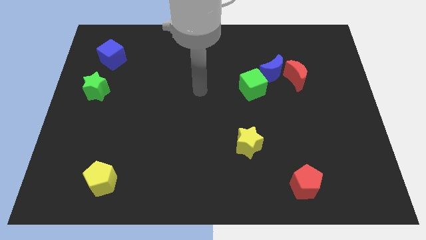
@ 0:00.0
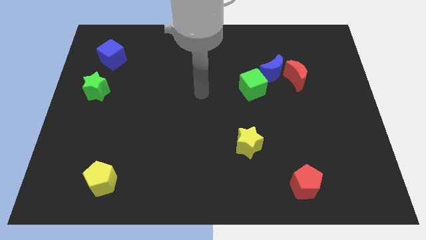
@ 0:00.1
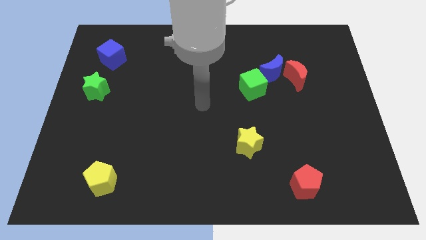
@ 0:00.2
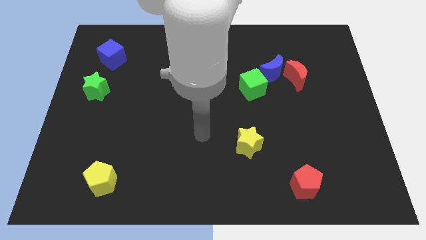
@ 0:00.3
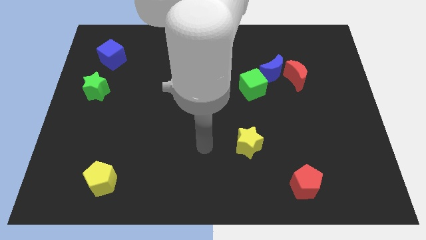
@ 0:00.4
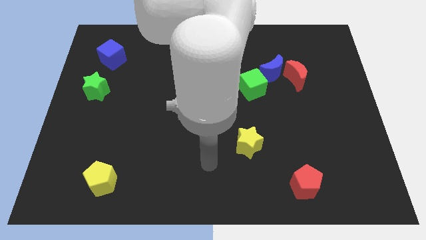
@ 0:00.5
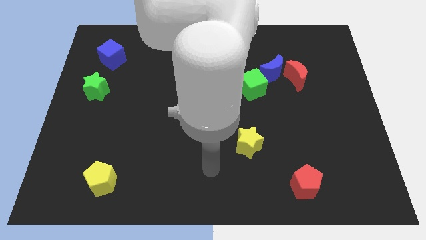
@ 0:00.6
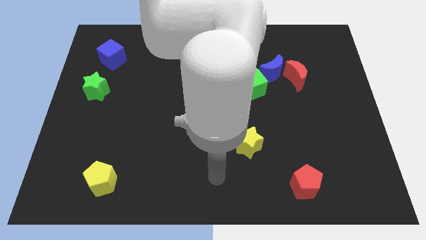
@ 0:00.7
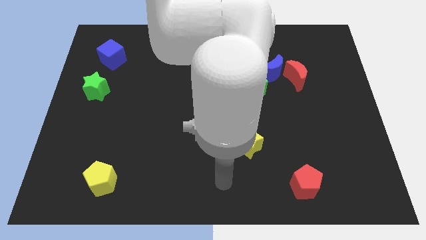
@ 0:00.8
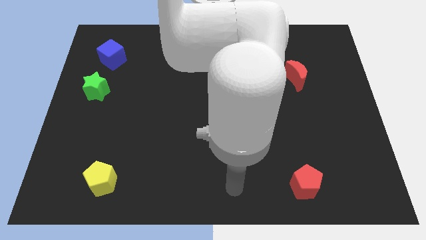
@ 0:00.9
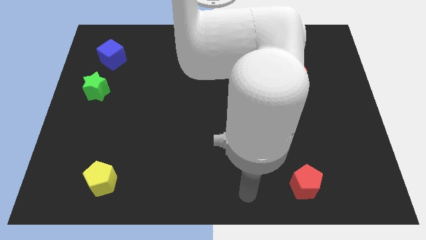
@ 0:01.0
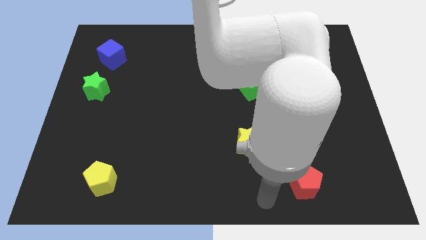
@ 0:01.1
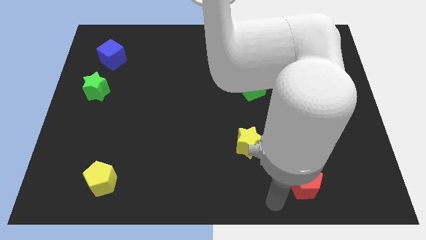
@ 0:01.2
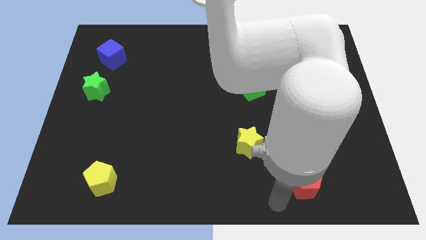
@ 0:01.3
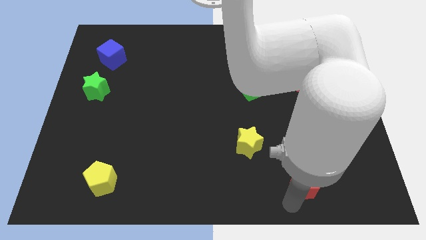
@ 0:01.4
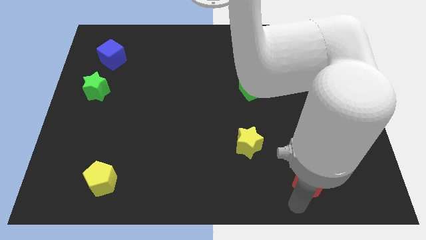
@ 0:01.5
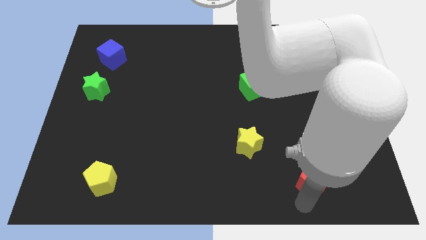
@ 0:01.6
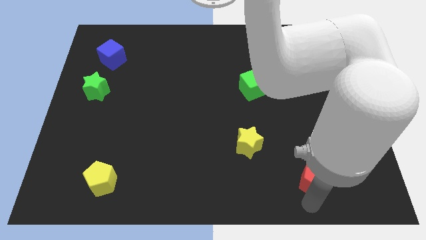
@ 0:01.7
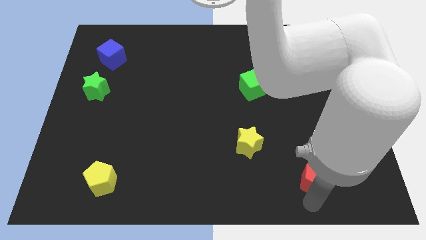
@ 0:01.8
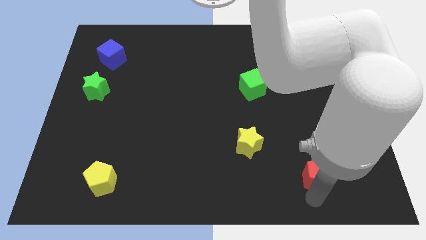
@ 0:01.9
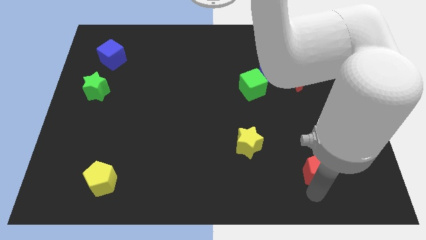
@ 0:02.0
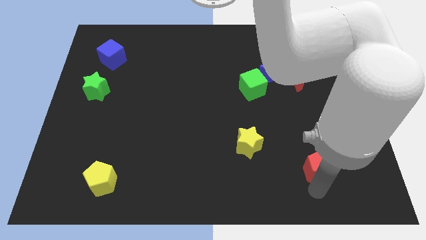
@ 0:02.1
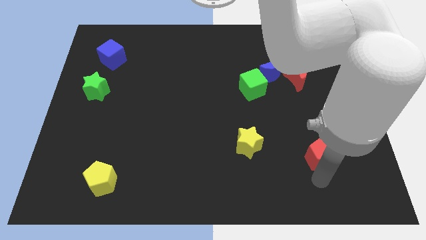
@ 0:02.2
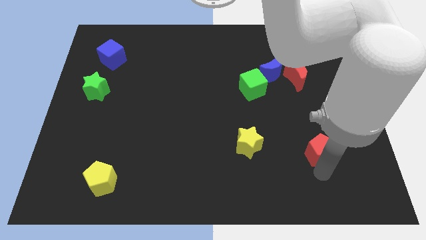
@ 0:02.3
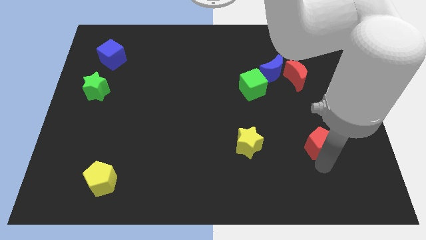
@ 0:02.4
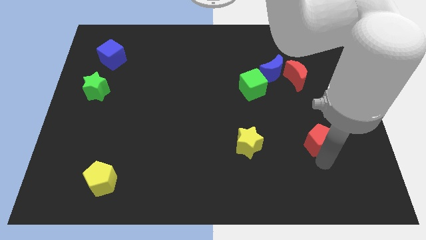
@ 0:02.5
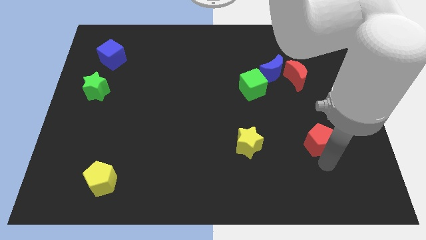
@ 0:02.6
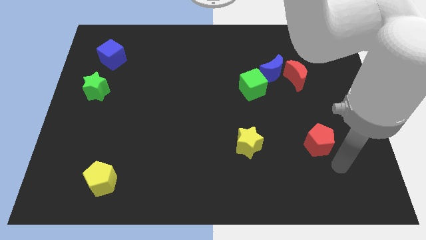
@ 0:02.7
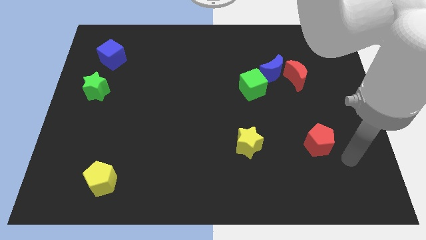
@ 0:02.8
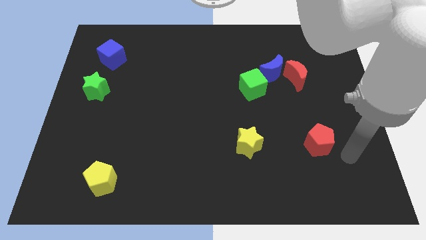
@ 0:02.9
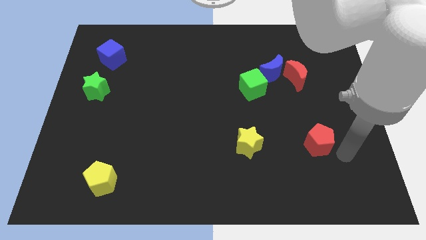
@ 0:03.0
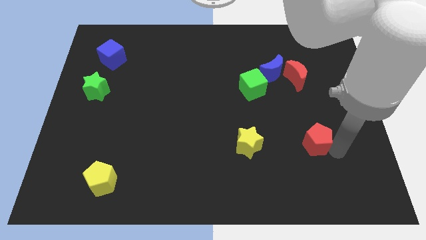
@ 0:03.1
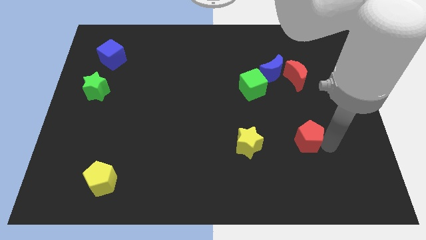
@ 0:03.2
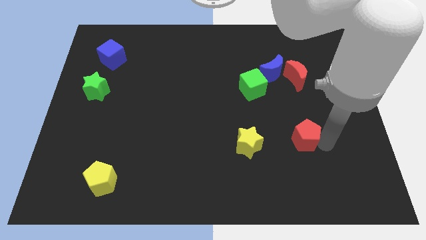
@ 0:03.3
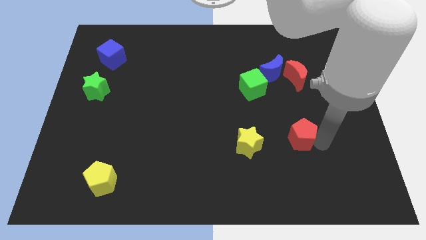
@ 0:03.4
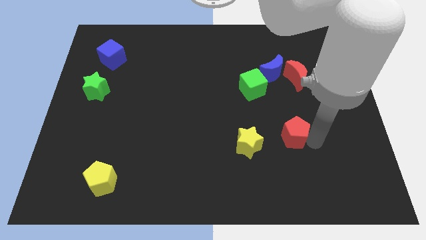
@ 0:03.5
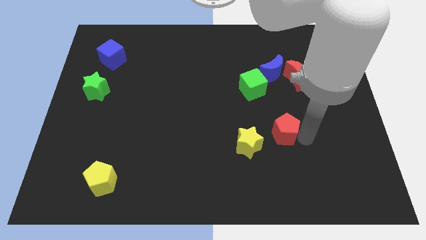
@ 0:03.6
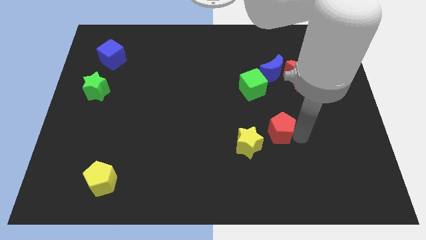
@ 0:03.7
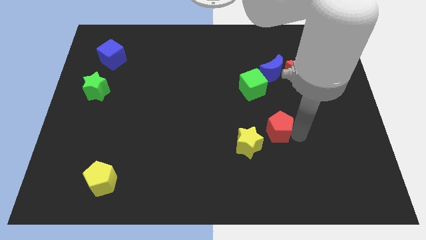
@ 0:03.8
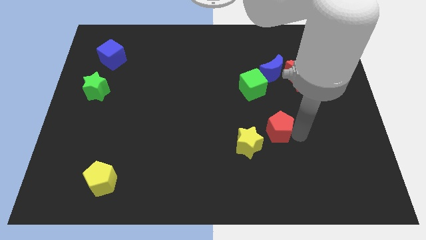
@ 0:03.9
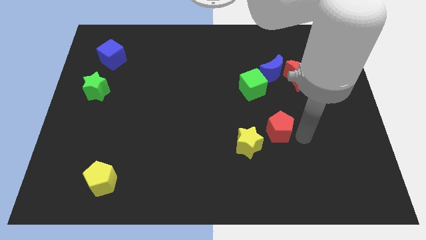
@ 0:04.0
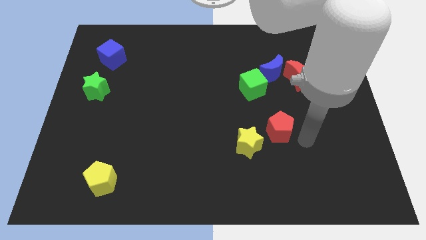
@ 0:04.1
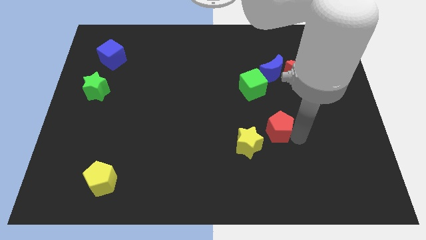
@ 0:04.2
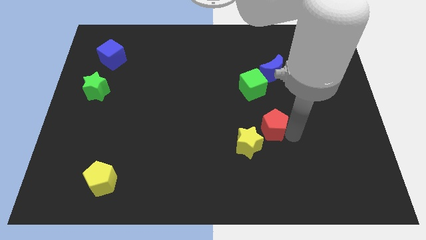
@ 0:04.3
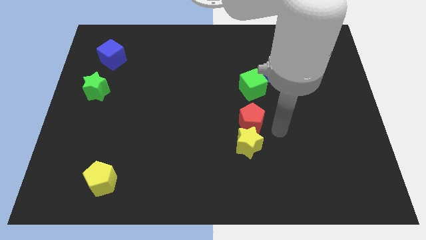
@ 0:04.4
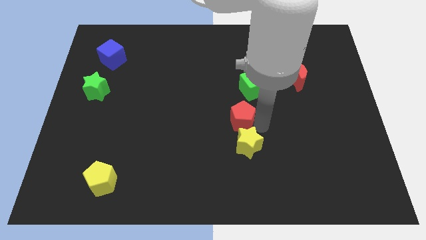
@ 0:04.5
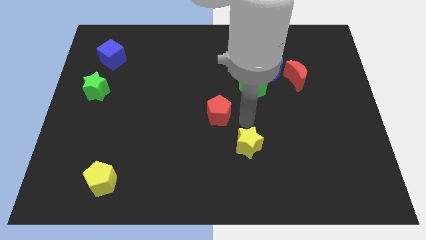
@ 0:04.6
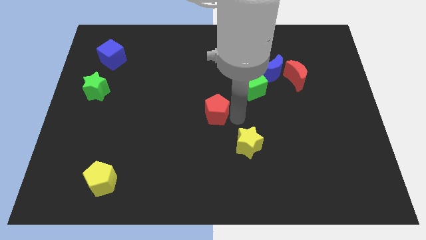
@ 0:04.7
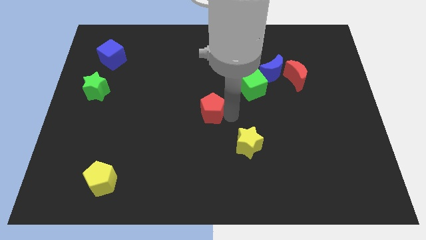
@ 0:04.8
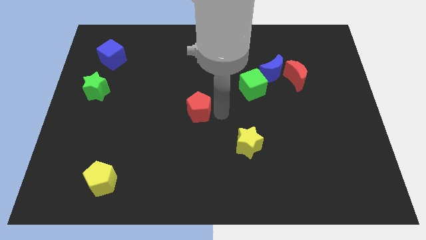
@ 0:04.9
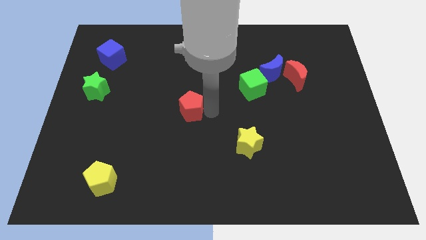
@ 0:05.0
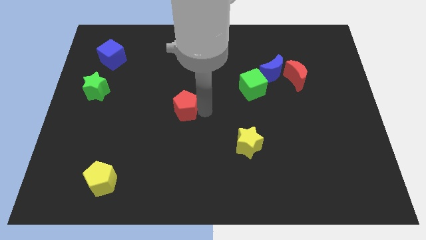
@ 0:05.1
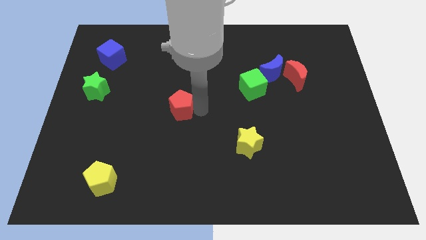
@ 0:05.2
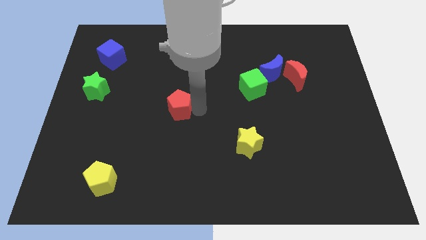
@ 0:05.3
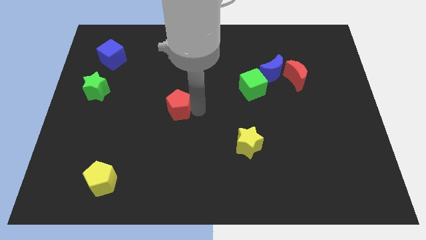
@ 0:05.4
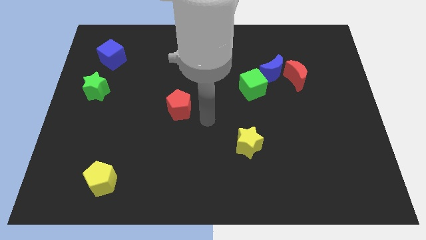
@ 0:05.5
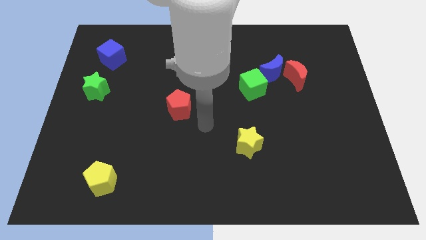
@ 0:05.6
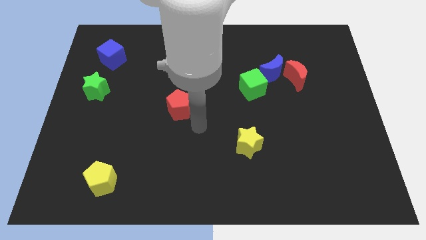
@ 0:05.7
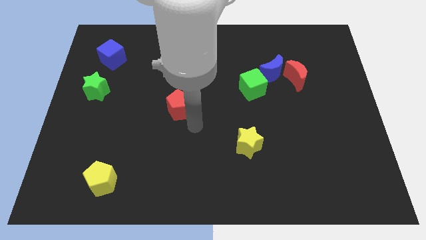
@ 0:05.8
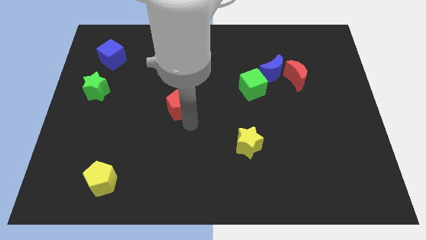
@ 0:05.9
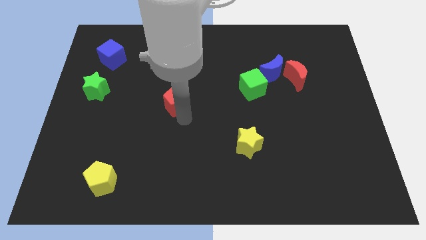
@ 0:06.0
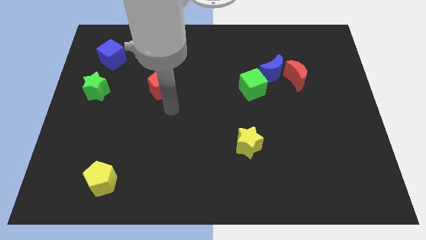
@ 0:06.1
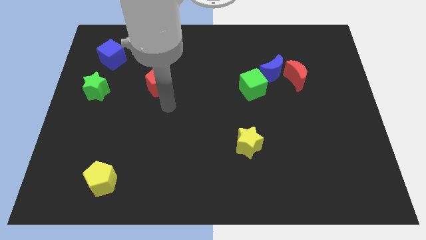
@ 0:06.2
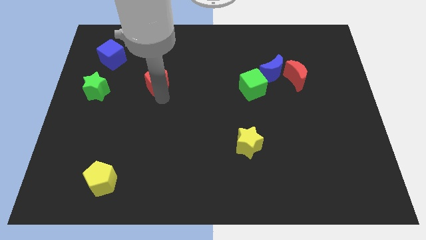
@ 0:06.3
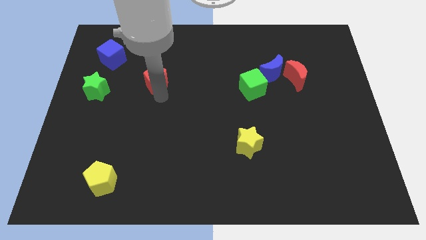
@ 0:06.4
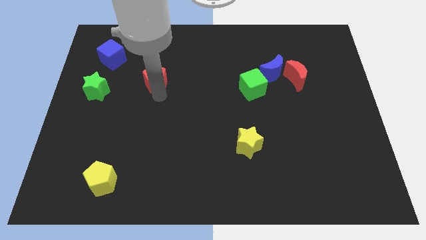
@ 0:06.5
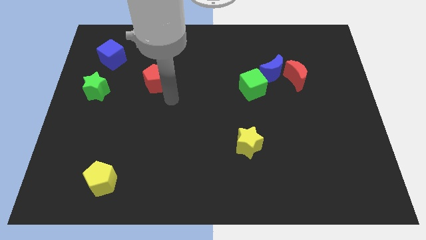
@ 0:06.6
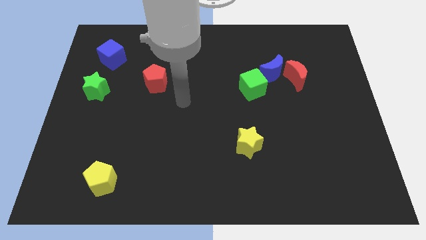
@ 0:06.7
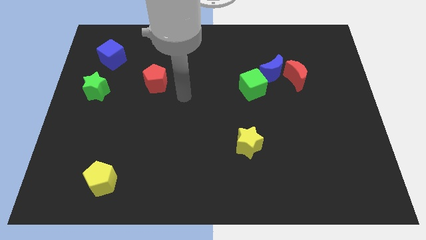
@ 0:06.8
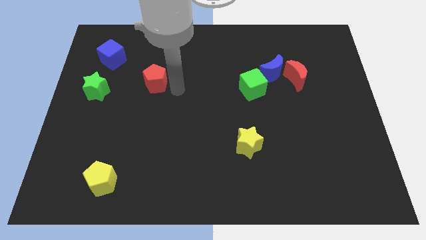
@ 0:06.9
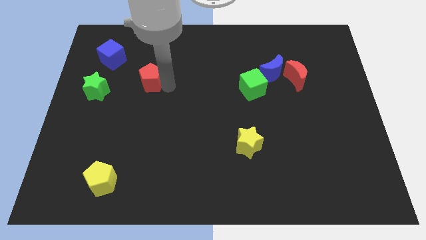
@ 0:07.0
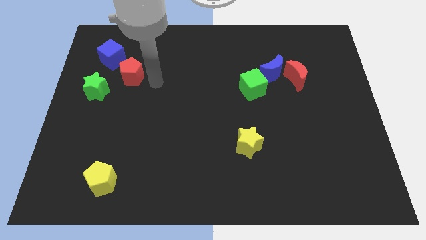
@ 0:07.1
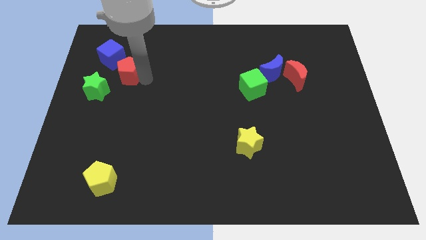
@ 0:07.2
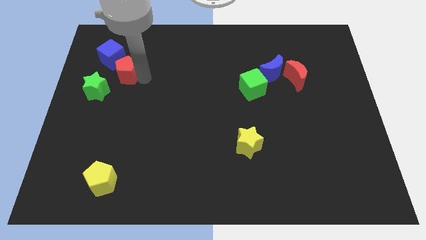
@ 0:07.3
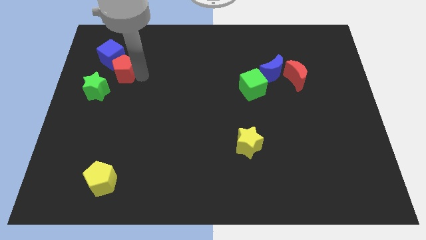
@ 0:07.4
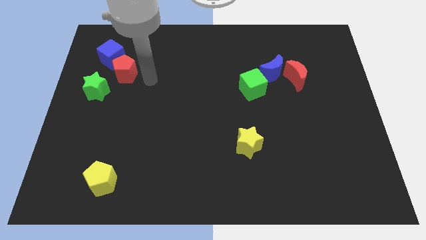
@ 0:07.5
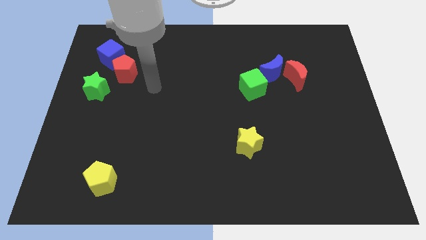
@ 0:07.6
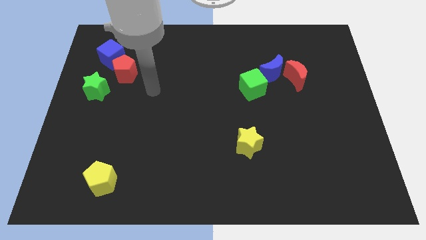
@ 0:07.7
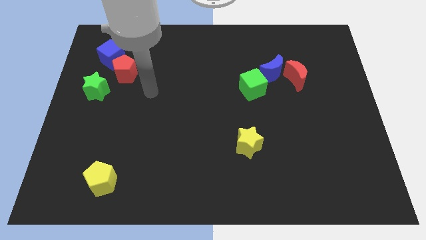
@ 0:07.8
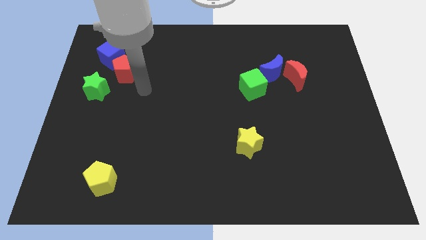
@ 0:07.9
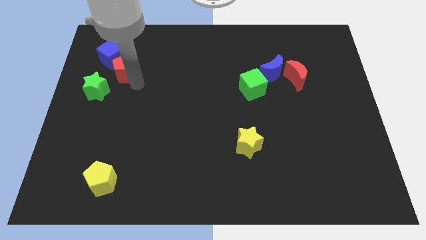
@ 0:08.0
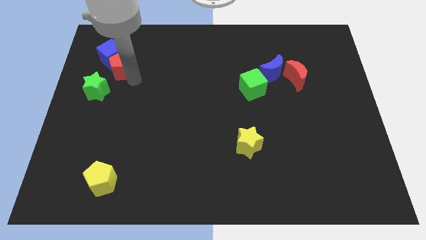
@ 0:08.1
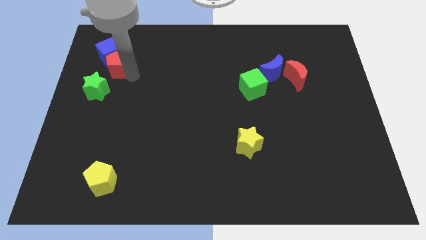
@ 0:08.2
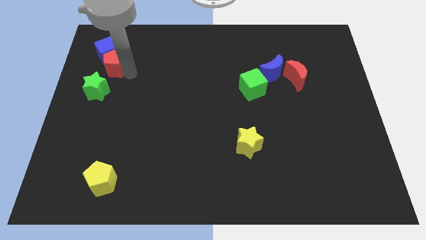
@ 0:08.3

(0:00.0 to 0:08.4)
slide the red pentagon to the blue cube
